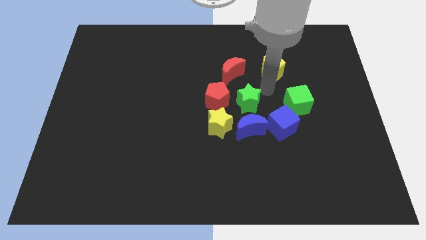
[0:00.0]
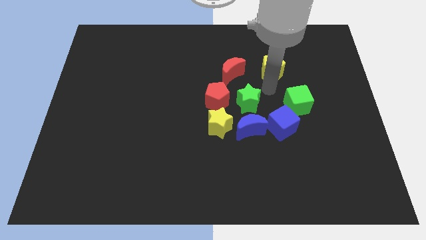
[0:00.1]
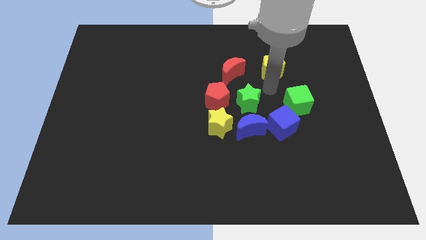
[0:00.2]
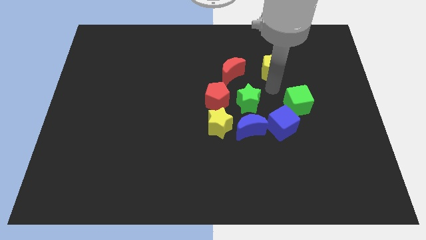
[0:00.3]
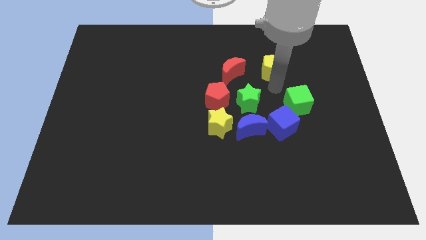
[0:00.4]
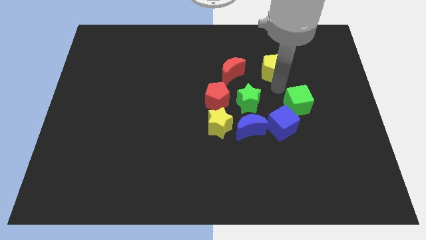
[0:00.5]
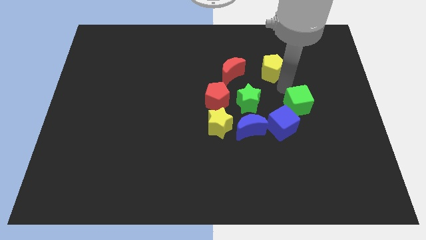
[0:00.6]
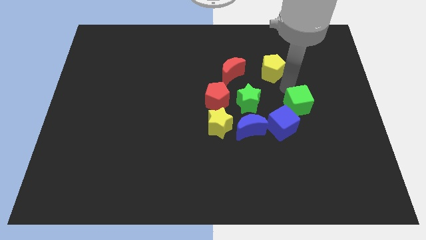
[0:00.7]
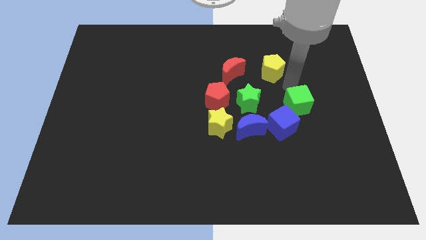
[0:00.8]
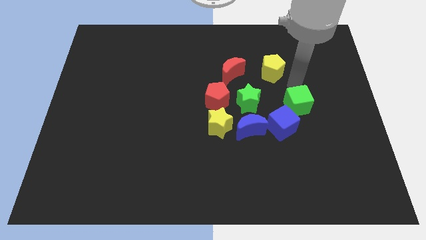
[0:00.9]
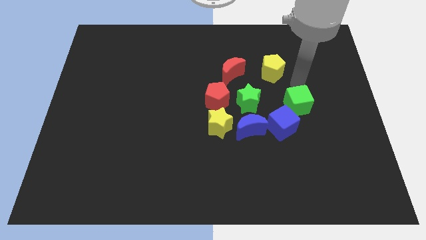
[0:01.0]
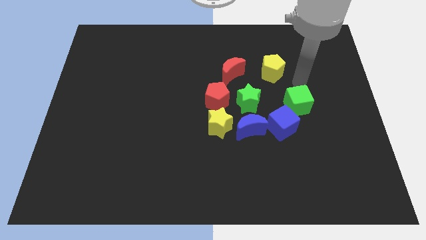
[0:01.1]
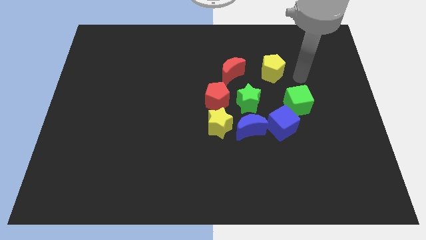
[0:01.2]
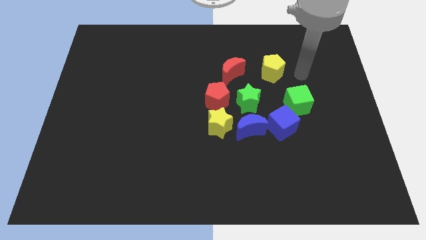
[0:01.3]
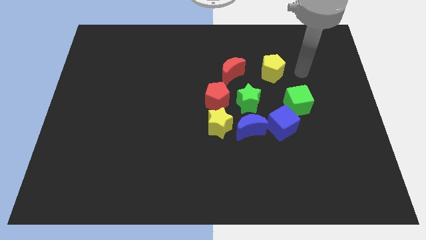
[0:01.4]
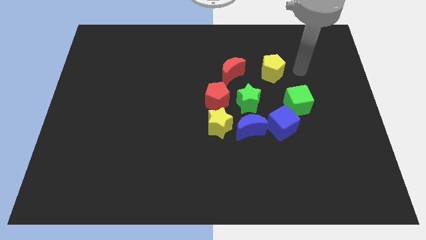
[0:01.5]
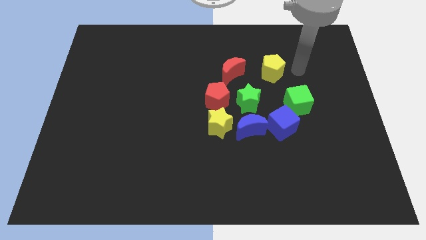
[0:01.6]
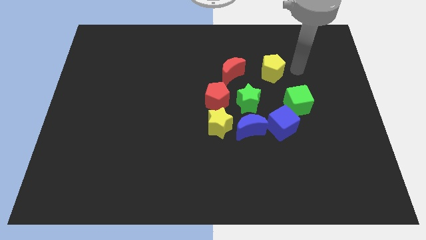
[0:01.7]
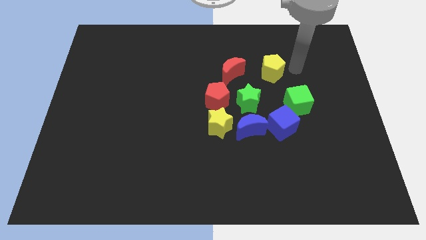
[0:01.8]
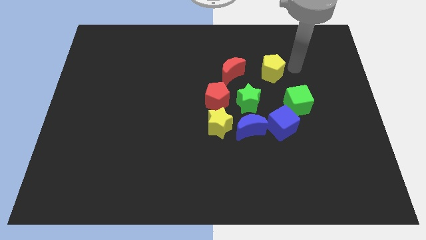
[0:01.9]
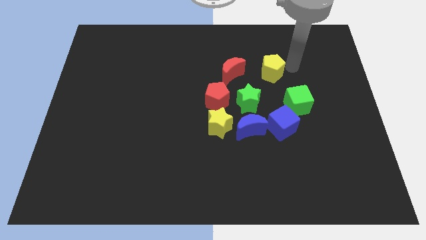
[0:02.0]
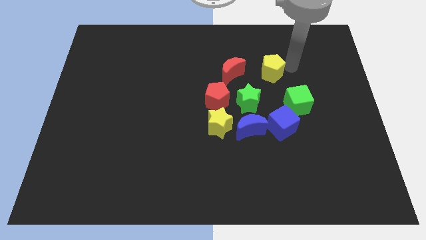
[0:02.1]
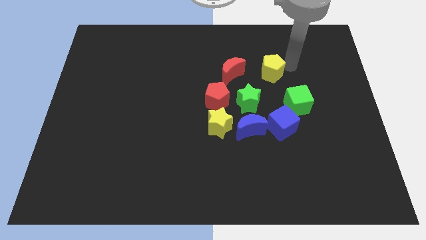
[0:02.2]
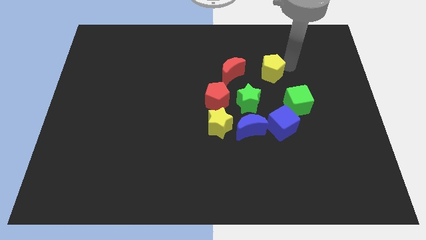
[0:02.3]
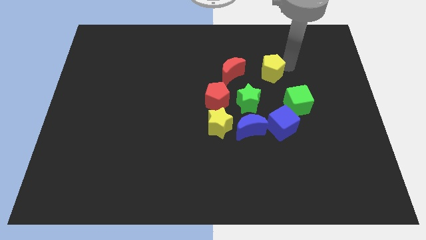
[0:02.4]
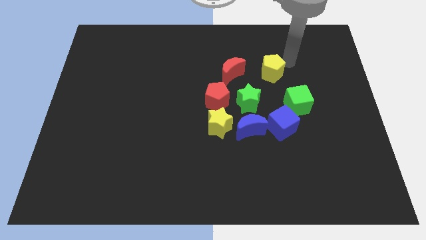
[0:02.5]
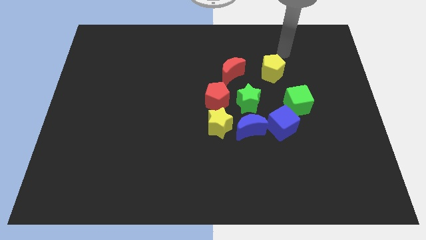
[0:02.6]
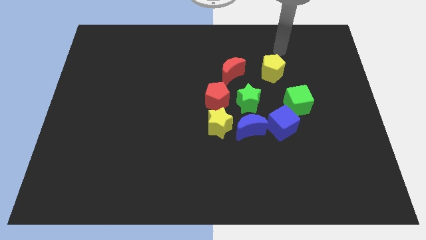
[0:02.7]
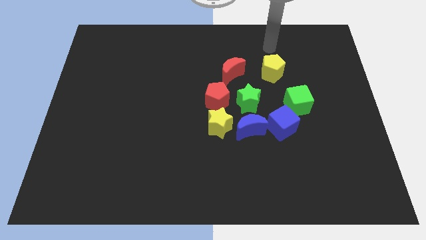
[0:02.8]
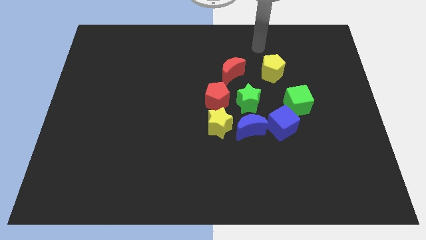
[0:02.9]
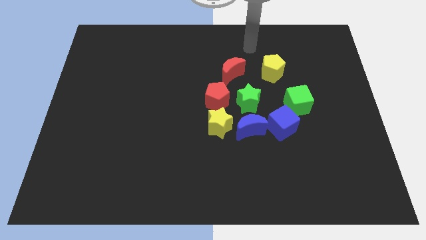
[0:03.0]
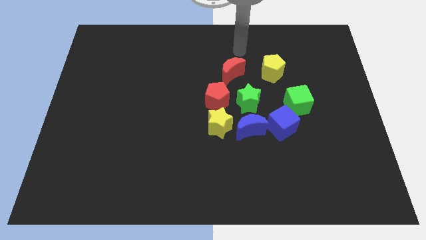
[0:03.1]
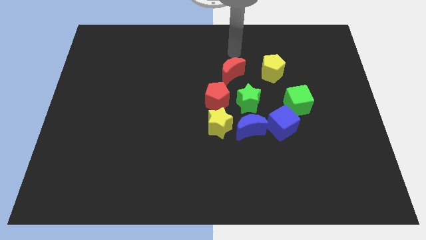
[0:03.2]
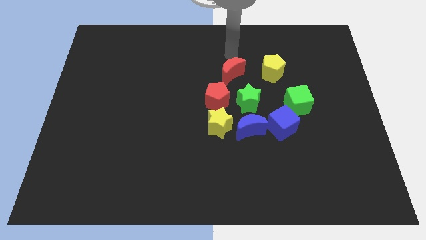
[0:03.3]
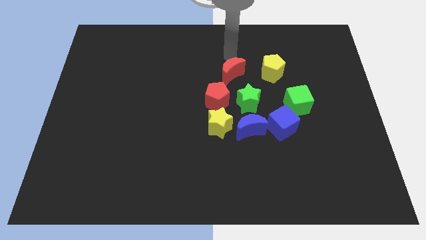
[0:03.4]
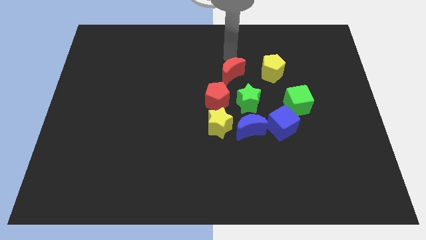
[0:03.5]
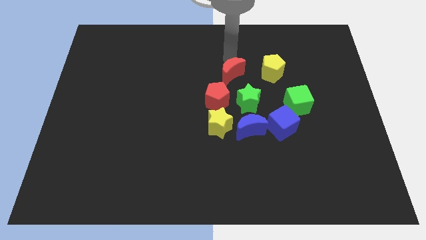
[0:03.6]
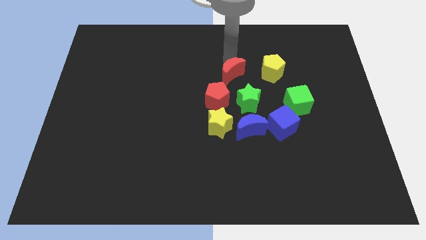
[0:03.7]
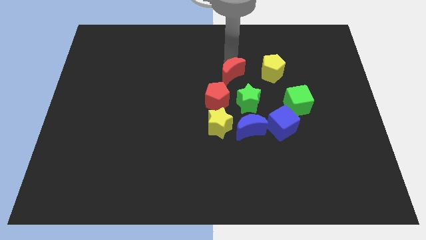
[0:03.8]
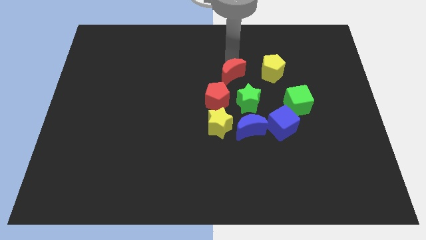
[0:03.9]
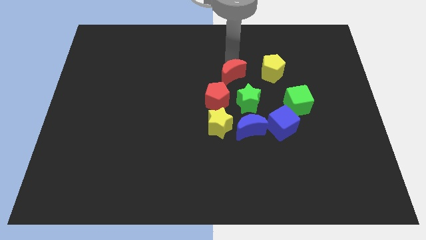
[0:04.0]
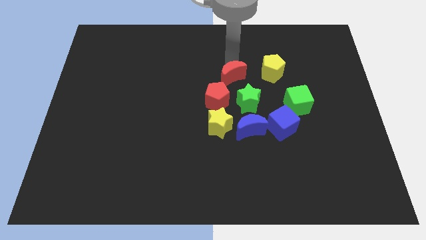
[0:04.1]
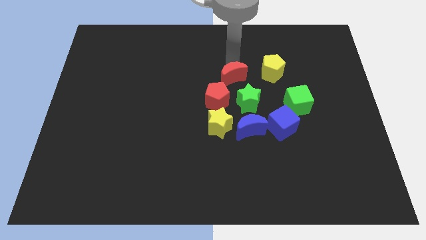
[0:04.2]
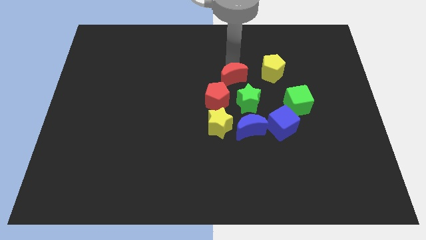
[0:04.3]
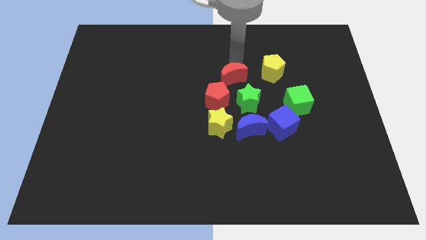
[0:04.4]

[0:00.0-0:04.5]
push the red crescent slightly to the bottom of the board

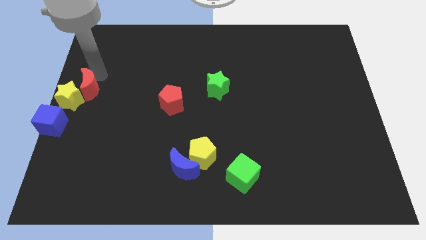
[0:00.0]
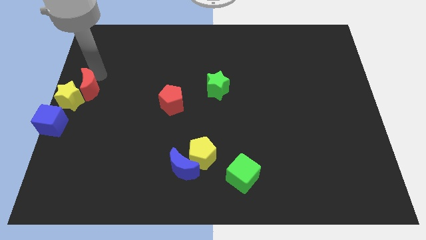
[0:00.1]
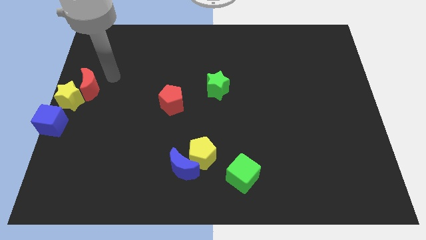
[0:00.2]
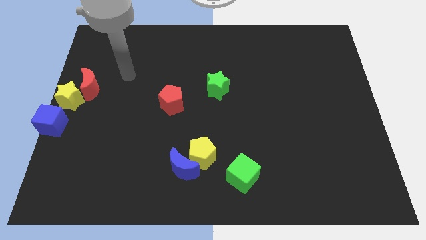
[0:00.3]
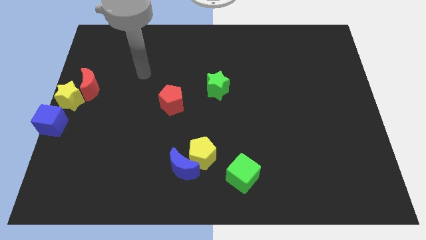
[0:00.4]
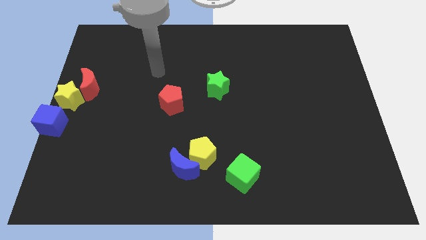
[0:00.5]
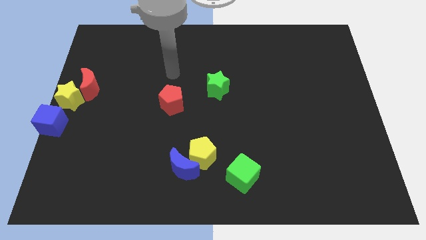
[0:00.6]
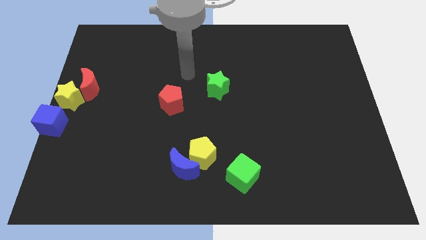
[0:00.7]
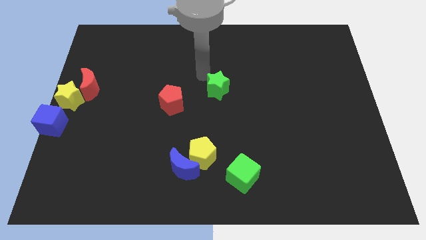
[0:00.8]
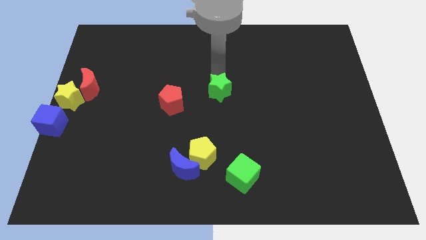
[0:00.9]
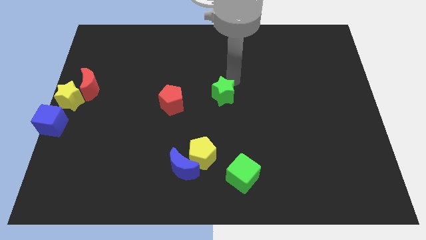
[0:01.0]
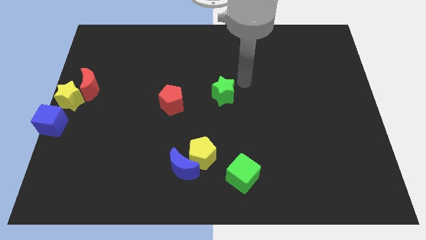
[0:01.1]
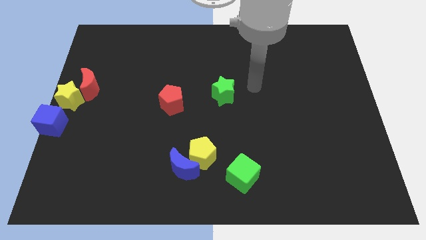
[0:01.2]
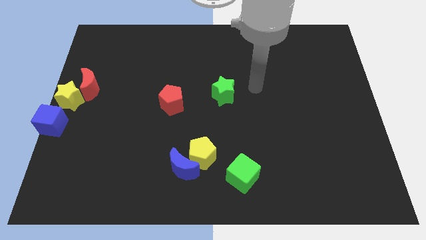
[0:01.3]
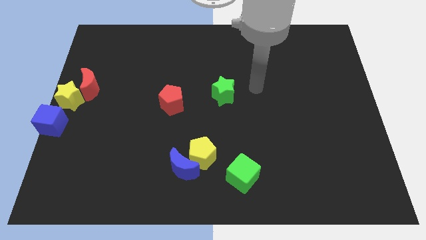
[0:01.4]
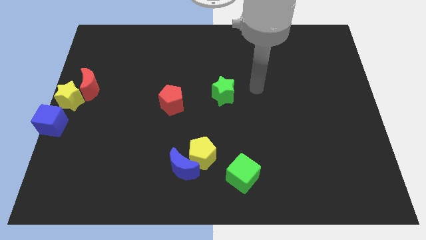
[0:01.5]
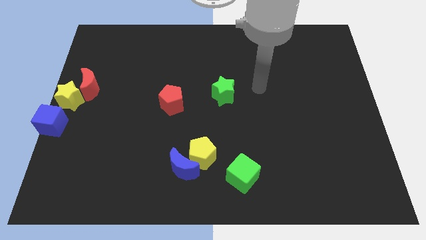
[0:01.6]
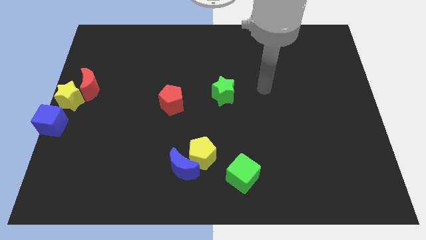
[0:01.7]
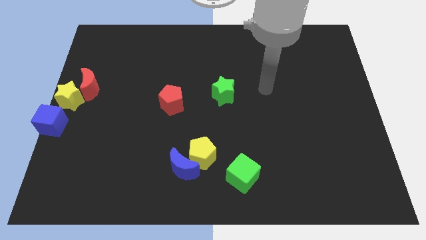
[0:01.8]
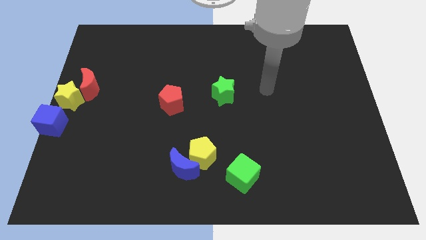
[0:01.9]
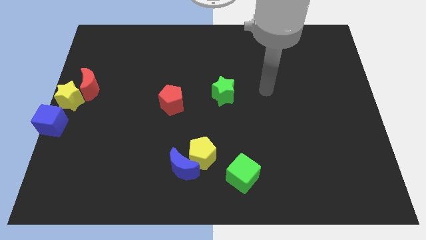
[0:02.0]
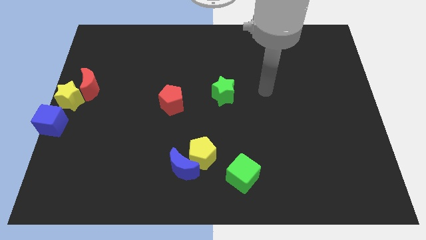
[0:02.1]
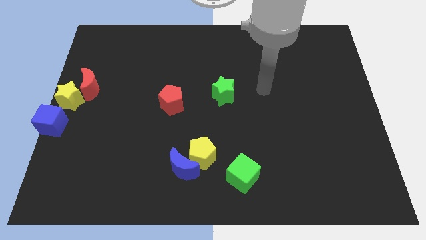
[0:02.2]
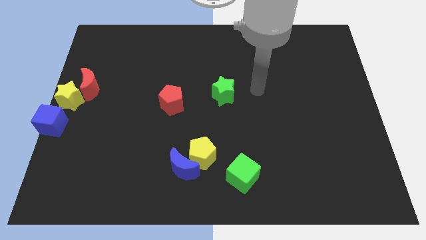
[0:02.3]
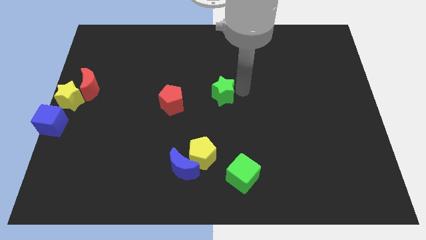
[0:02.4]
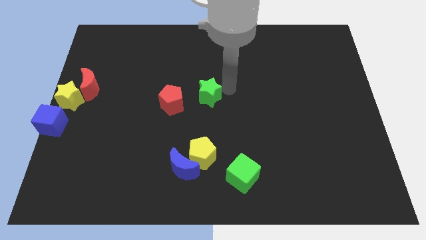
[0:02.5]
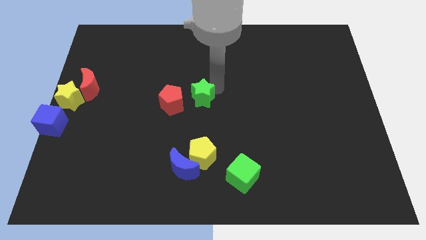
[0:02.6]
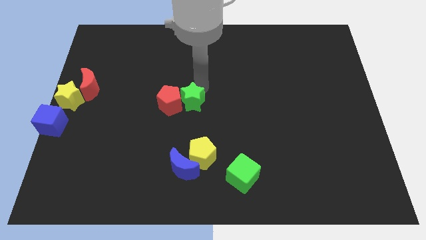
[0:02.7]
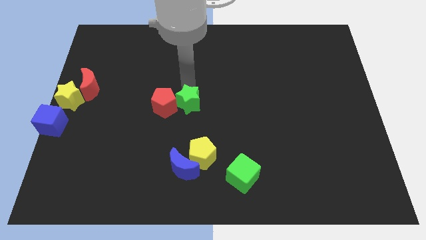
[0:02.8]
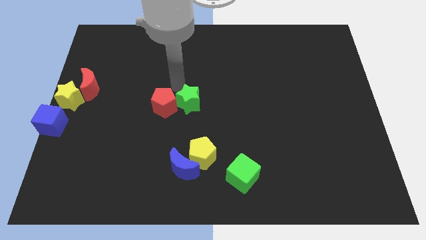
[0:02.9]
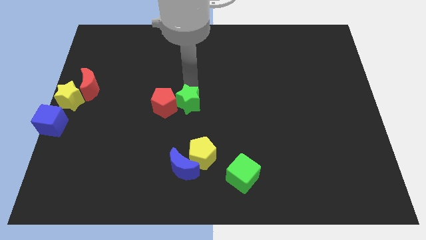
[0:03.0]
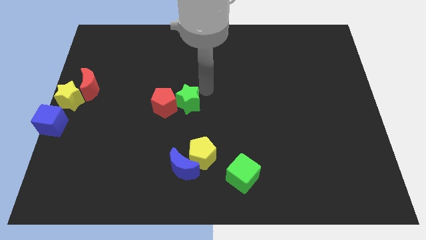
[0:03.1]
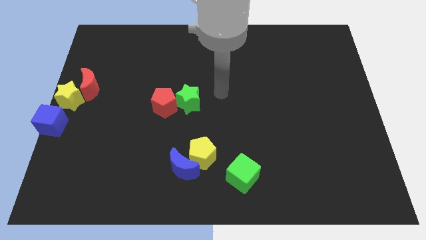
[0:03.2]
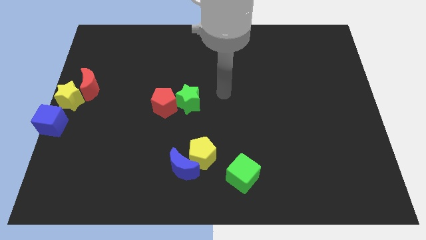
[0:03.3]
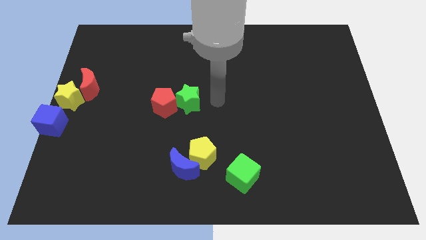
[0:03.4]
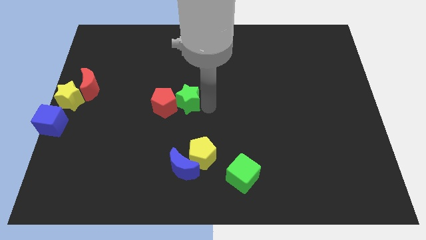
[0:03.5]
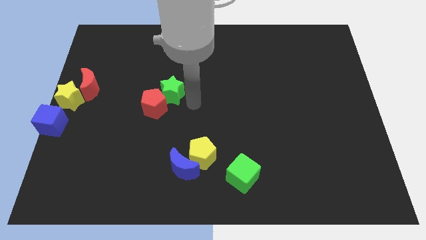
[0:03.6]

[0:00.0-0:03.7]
push the green star into the right side of the red pentagon

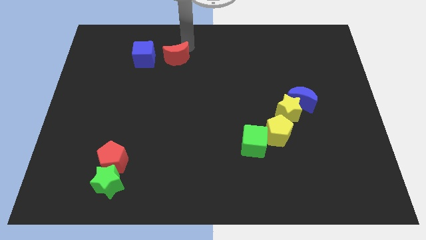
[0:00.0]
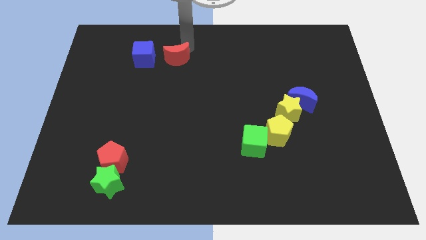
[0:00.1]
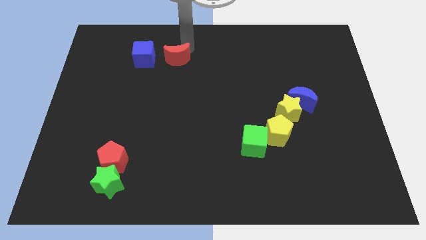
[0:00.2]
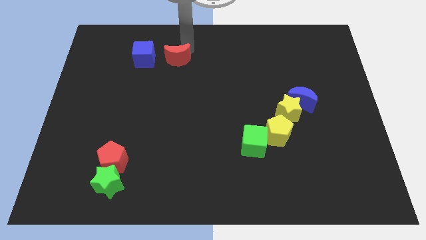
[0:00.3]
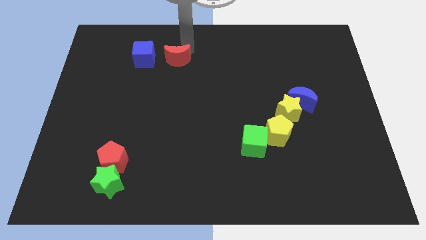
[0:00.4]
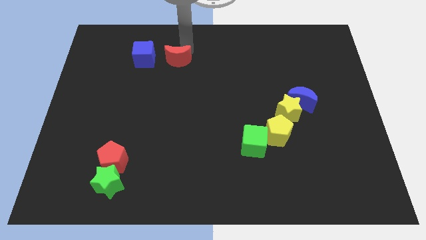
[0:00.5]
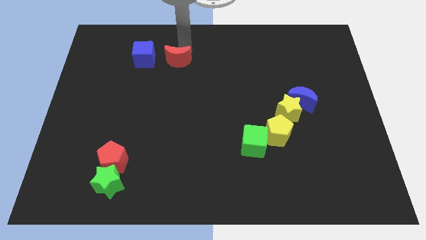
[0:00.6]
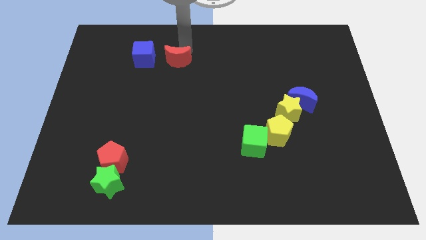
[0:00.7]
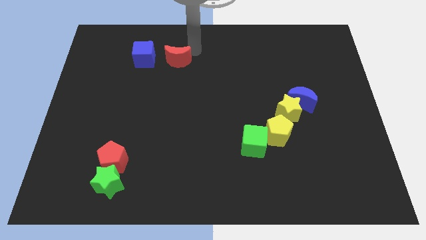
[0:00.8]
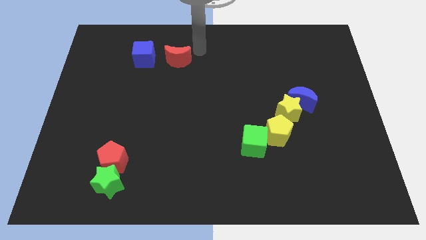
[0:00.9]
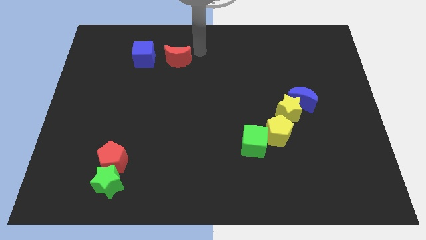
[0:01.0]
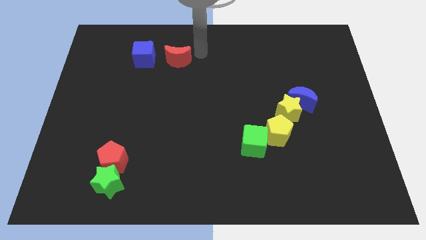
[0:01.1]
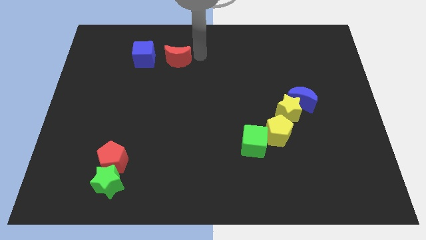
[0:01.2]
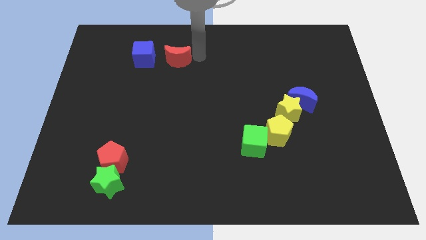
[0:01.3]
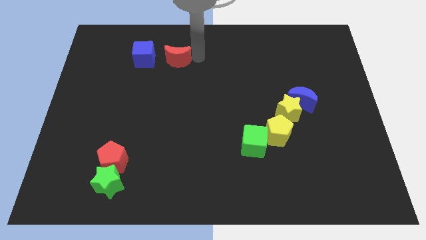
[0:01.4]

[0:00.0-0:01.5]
place red moon to the center top
